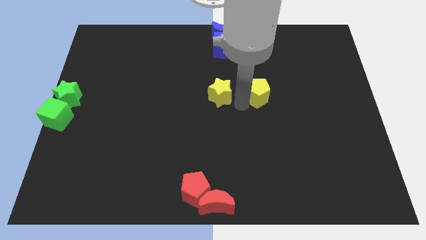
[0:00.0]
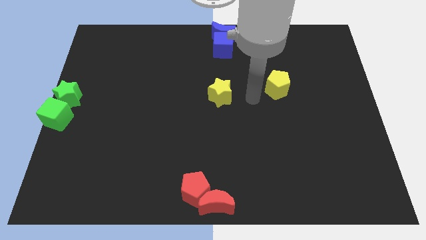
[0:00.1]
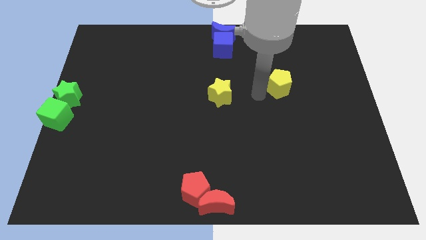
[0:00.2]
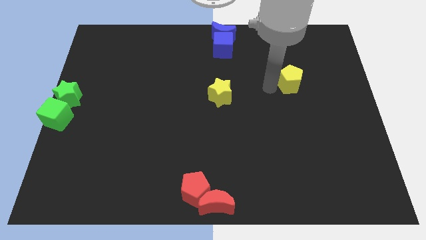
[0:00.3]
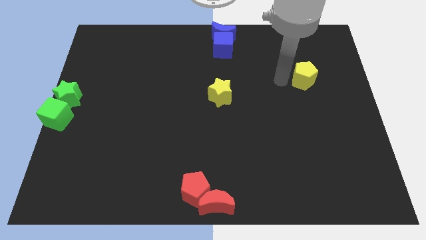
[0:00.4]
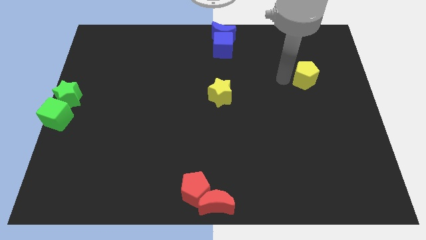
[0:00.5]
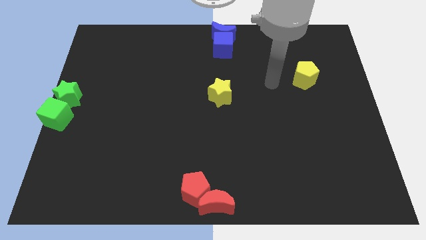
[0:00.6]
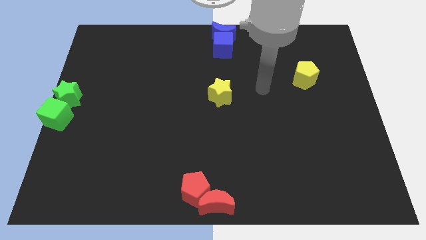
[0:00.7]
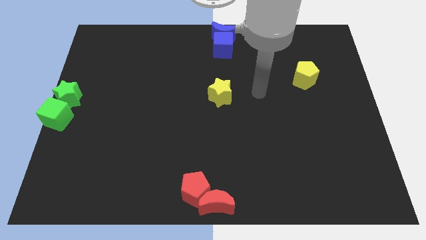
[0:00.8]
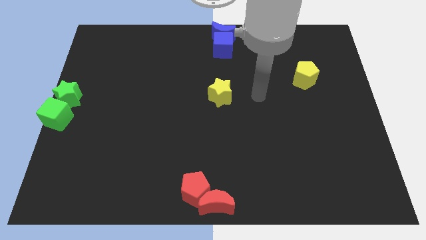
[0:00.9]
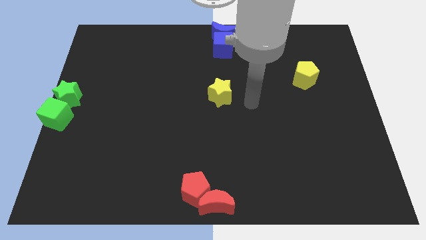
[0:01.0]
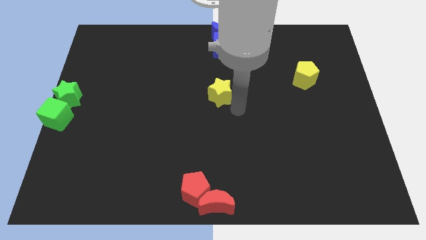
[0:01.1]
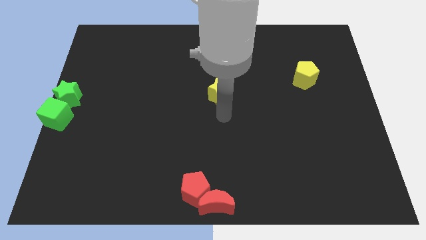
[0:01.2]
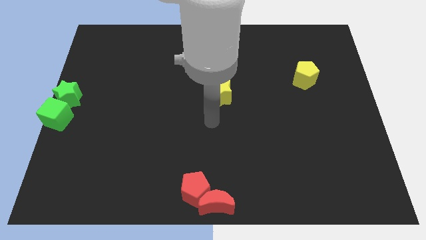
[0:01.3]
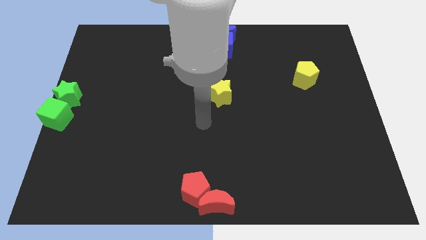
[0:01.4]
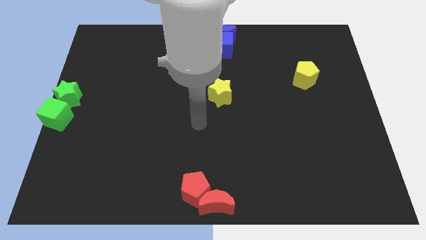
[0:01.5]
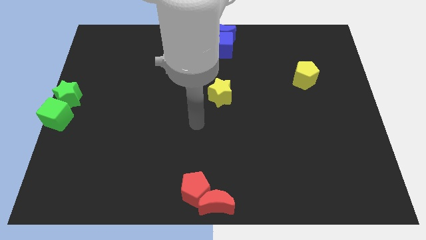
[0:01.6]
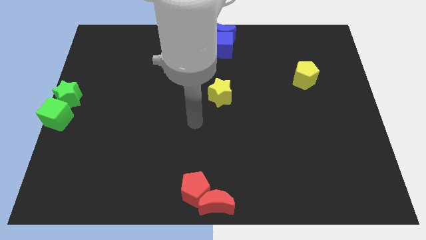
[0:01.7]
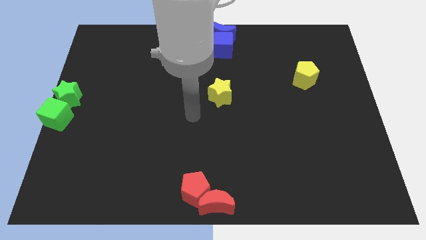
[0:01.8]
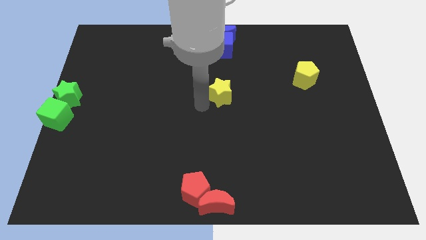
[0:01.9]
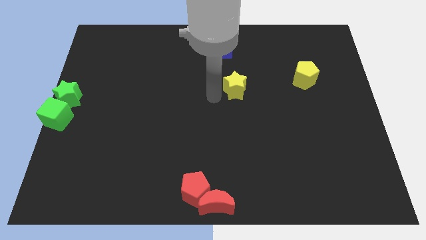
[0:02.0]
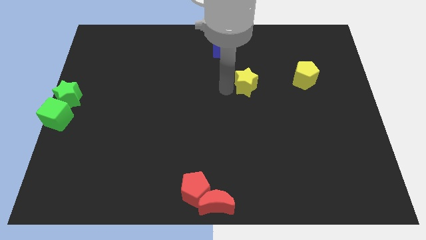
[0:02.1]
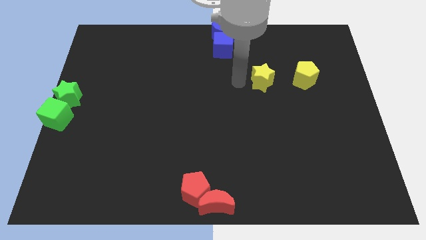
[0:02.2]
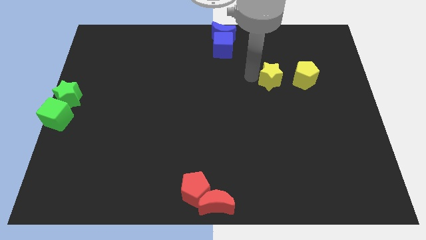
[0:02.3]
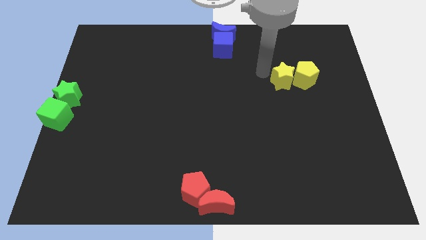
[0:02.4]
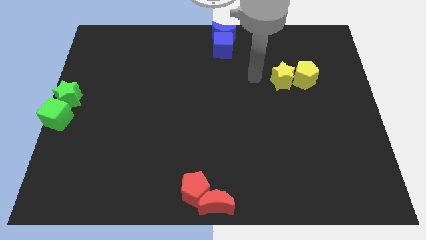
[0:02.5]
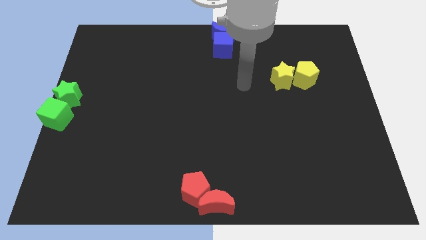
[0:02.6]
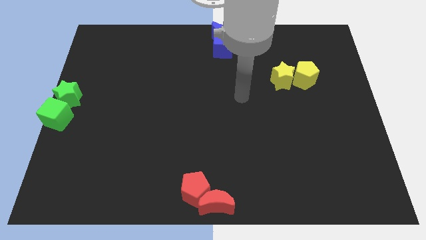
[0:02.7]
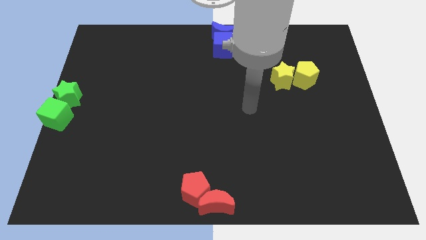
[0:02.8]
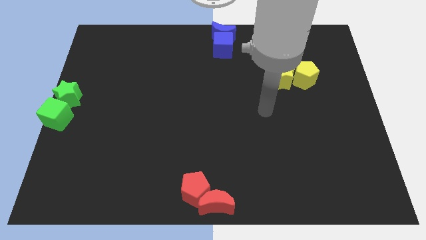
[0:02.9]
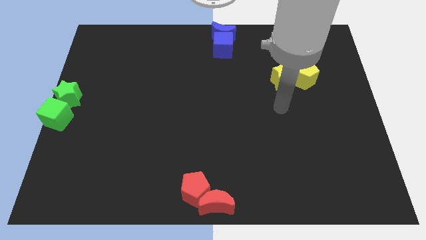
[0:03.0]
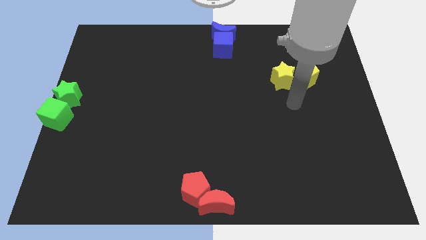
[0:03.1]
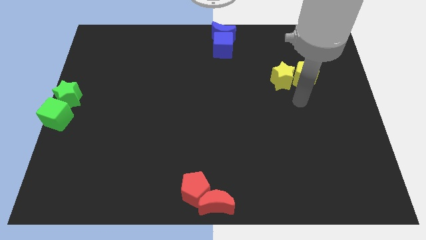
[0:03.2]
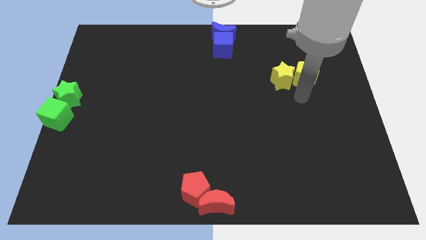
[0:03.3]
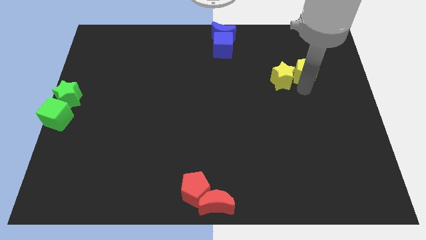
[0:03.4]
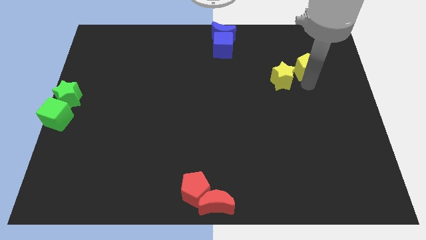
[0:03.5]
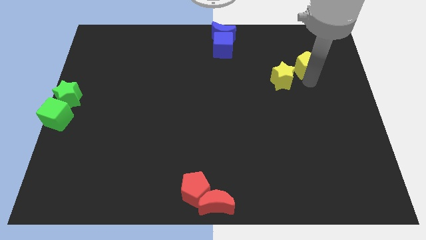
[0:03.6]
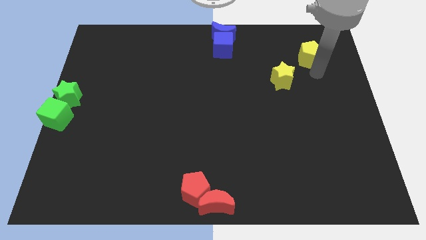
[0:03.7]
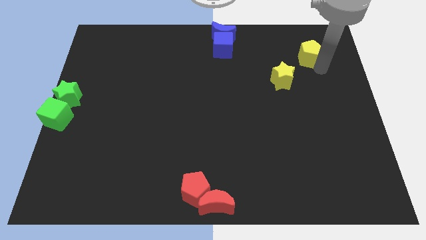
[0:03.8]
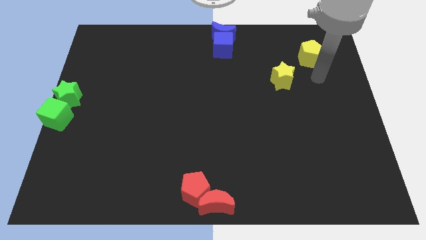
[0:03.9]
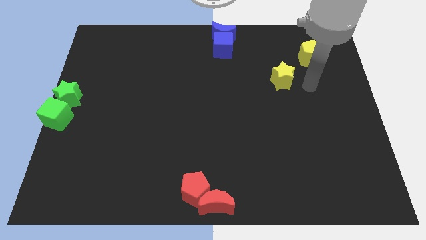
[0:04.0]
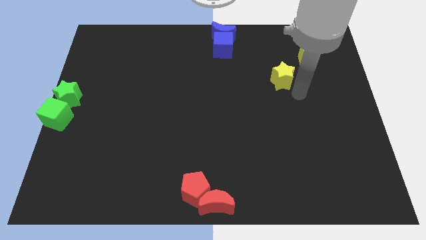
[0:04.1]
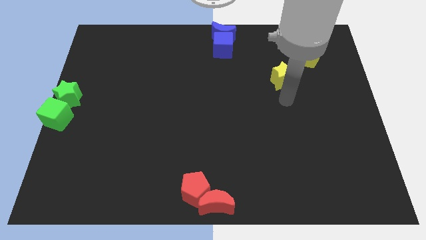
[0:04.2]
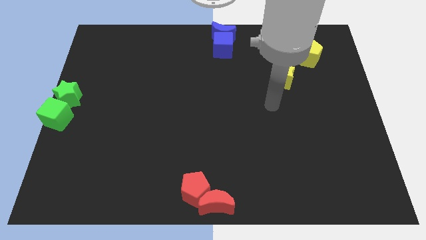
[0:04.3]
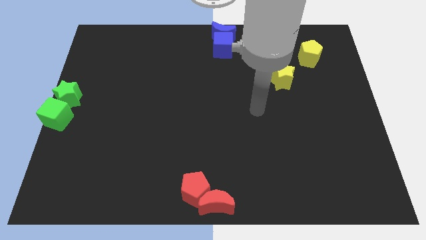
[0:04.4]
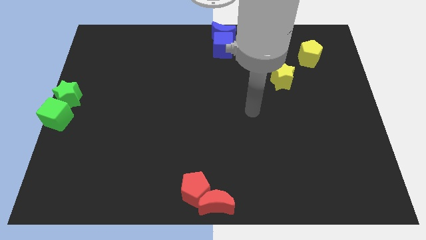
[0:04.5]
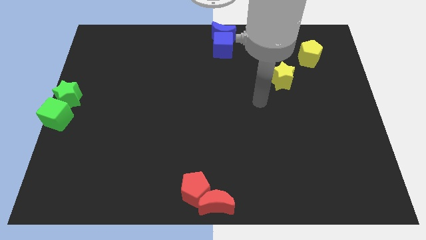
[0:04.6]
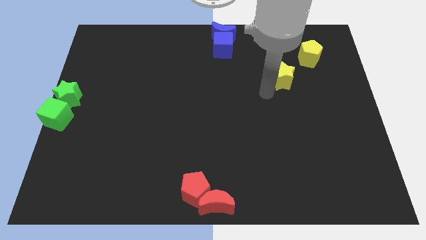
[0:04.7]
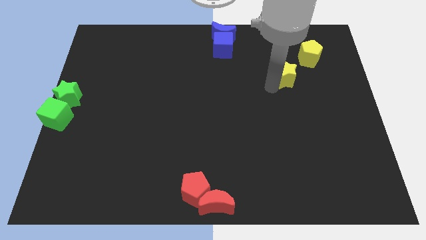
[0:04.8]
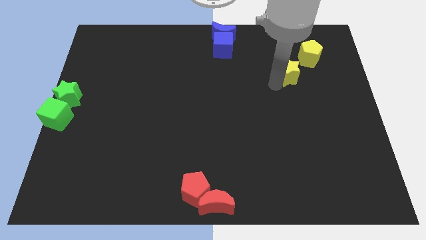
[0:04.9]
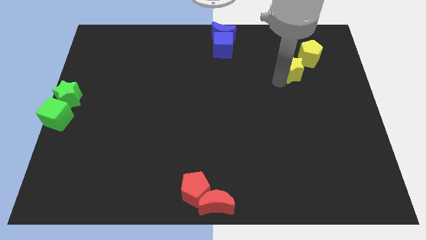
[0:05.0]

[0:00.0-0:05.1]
push both of the yellow blocks towards the top right corner

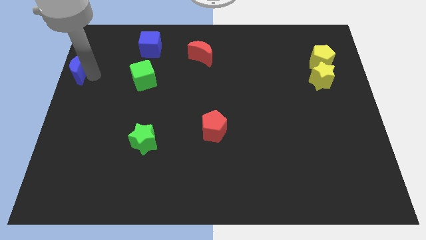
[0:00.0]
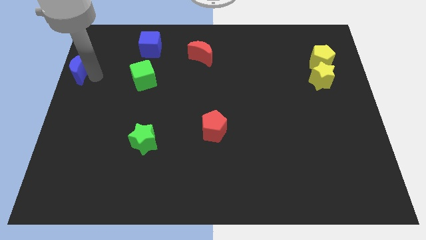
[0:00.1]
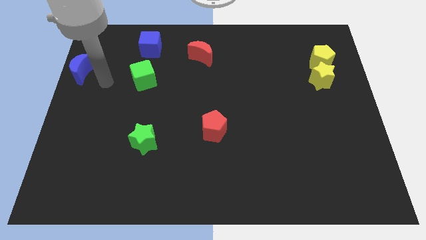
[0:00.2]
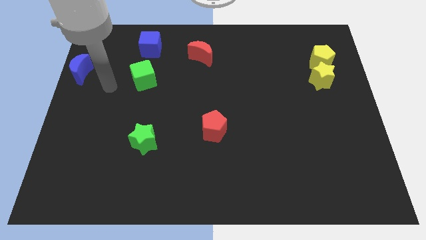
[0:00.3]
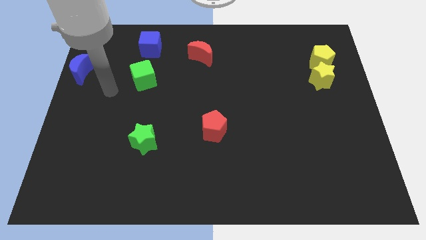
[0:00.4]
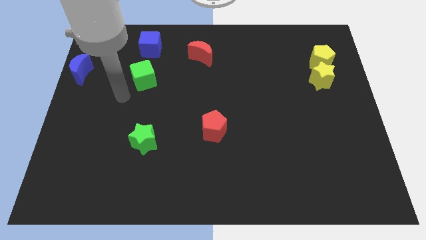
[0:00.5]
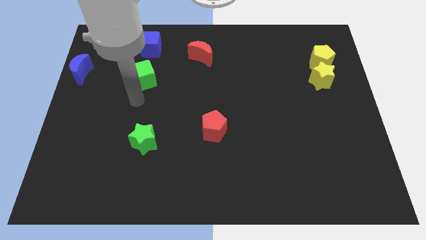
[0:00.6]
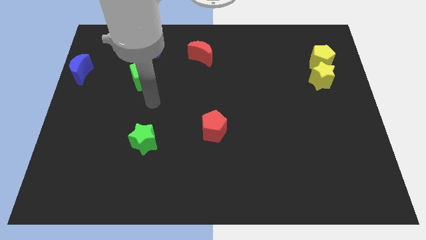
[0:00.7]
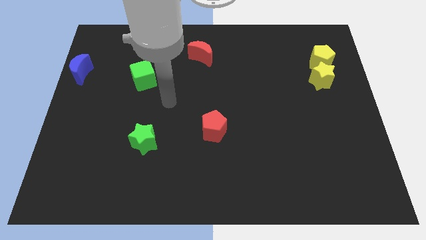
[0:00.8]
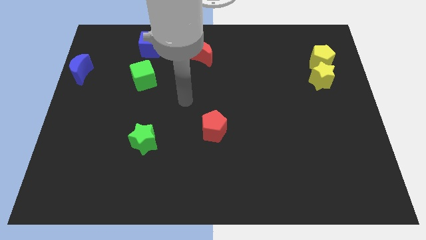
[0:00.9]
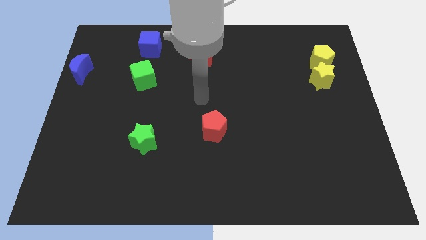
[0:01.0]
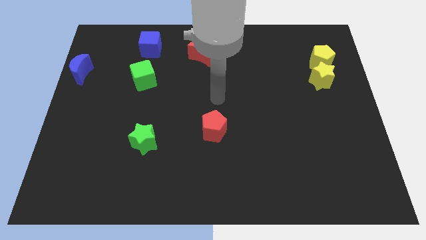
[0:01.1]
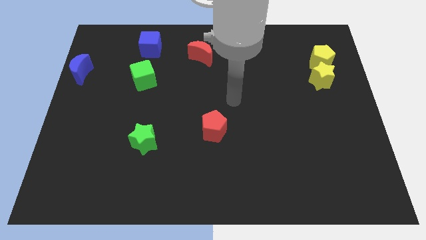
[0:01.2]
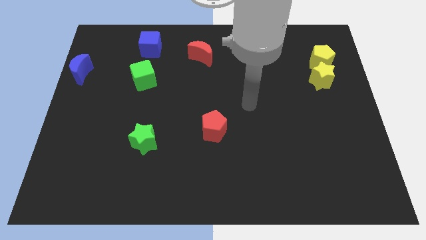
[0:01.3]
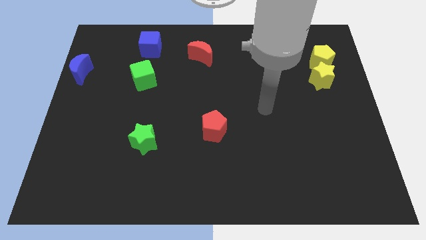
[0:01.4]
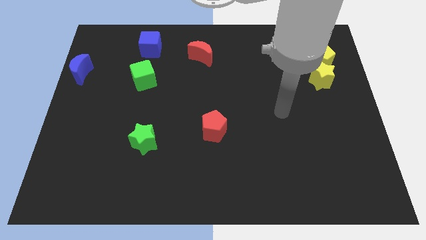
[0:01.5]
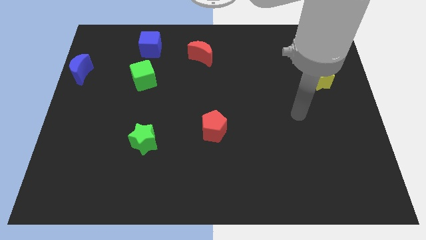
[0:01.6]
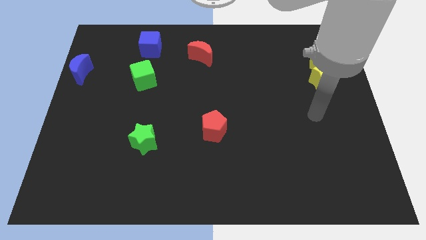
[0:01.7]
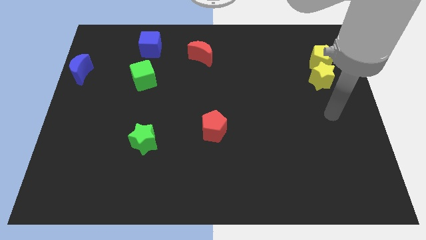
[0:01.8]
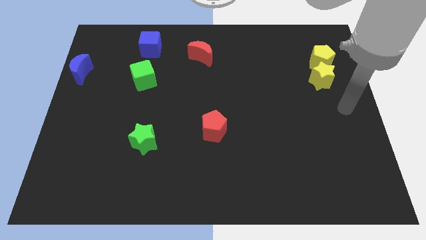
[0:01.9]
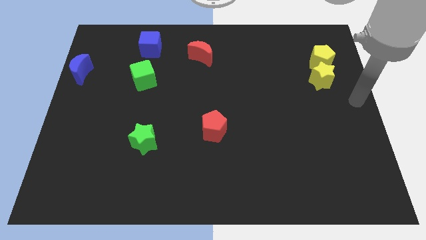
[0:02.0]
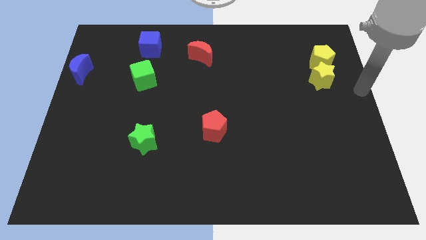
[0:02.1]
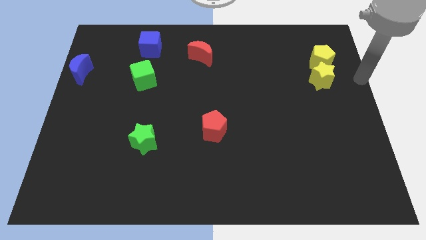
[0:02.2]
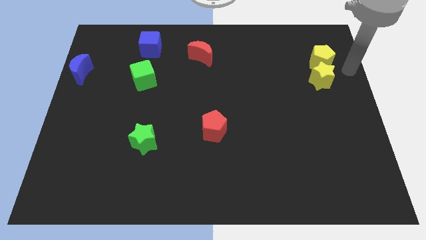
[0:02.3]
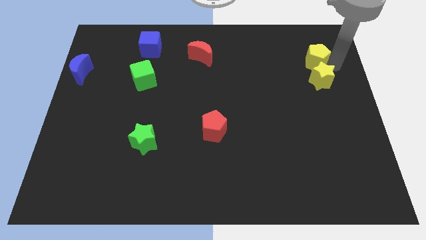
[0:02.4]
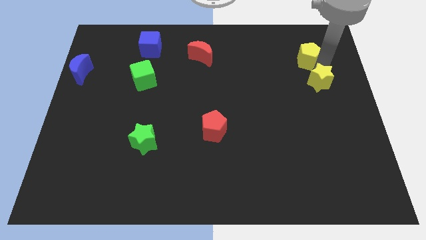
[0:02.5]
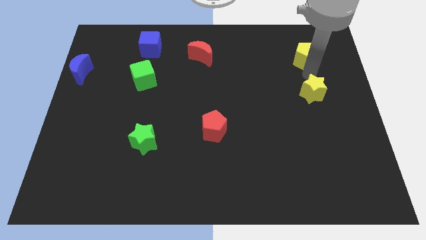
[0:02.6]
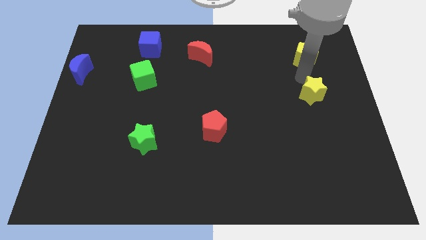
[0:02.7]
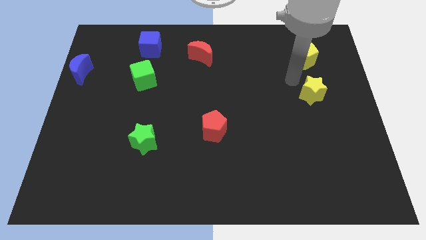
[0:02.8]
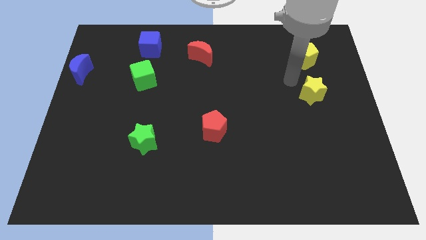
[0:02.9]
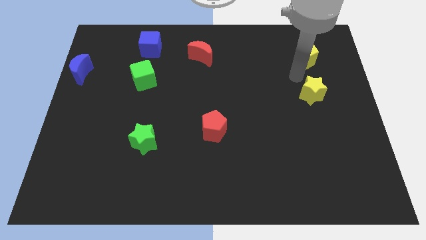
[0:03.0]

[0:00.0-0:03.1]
move your arm in between yellow pentagon and yellow star

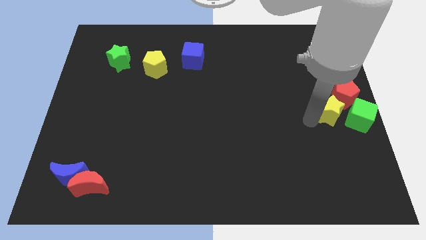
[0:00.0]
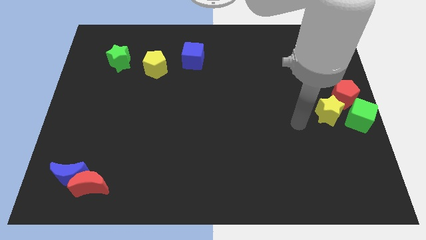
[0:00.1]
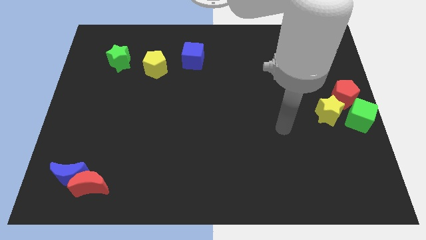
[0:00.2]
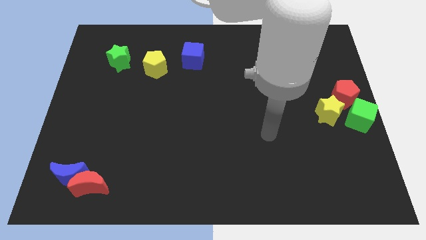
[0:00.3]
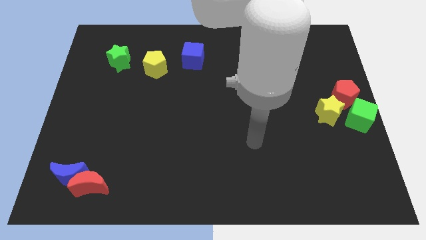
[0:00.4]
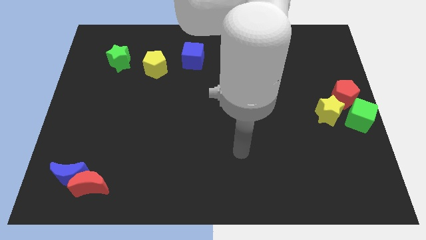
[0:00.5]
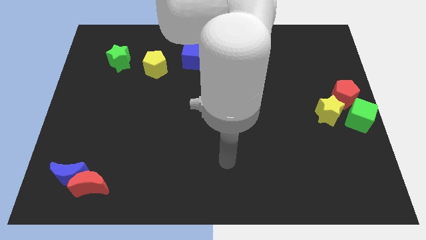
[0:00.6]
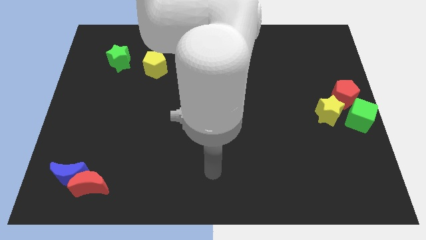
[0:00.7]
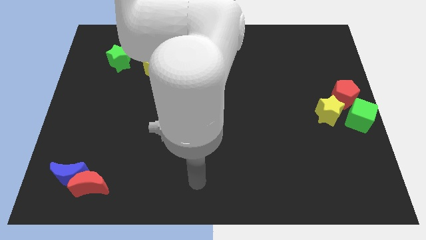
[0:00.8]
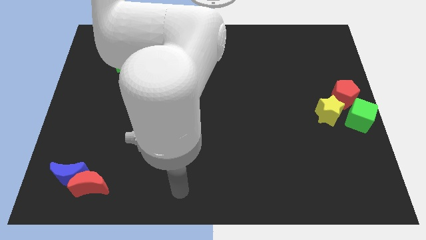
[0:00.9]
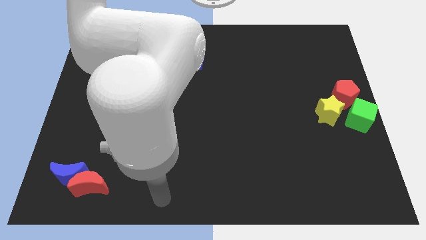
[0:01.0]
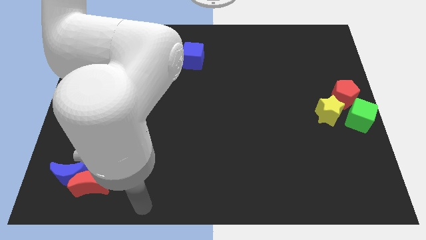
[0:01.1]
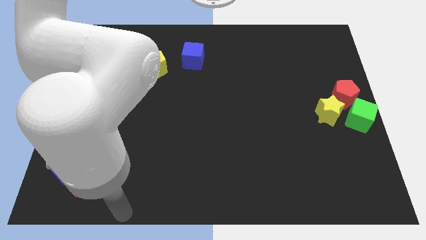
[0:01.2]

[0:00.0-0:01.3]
move your arm away from the yellow star
